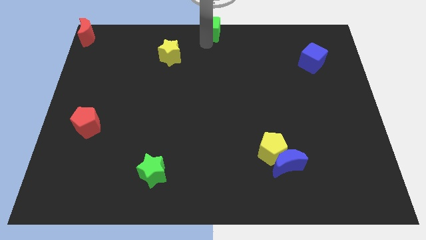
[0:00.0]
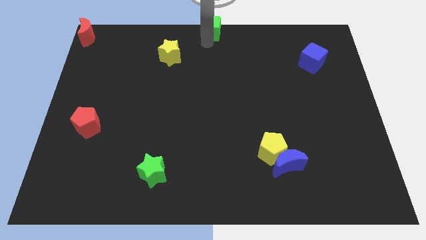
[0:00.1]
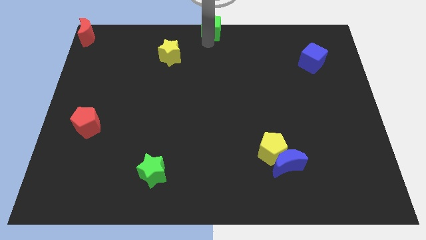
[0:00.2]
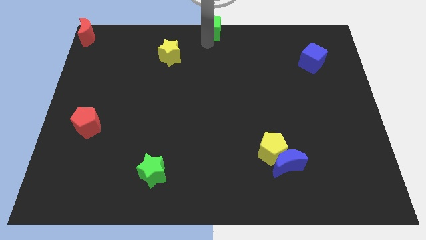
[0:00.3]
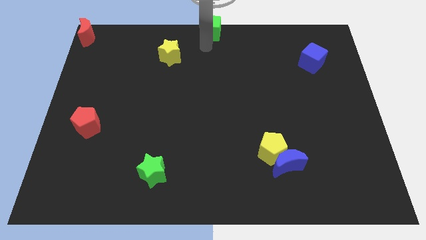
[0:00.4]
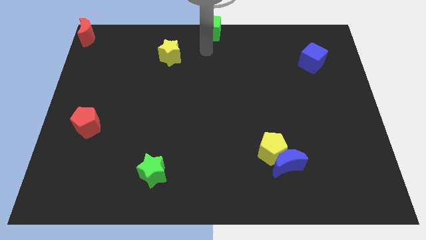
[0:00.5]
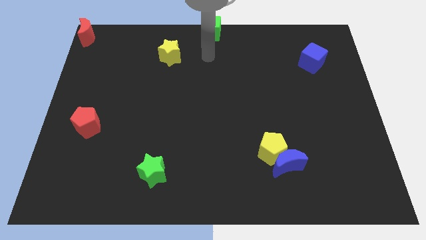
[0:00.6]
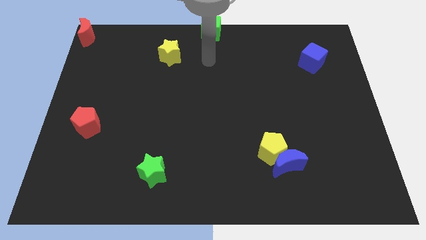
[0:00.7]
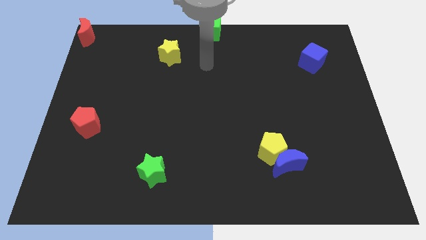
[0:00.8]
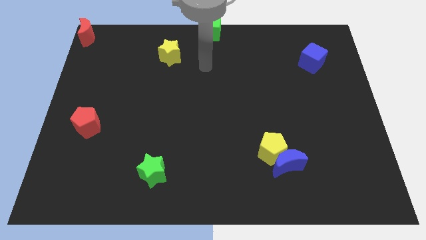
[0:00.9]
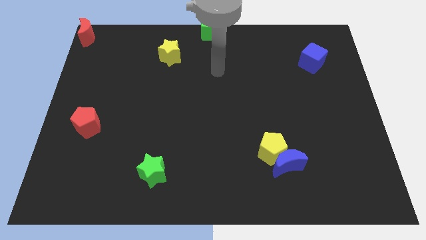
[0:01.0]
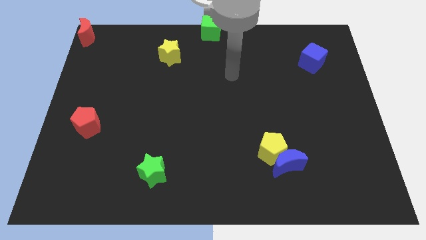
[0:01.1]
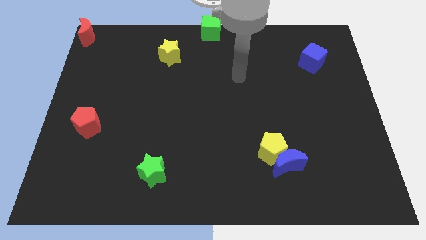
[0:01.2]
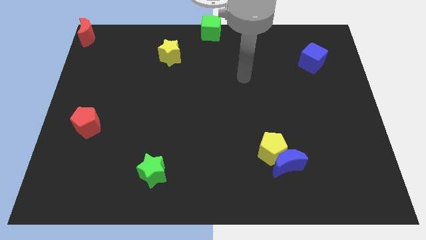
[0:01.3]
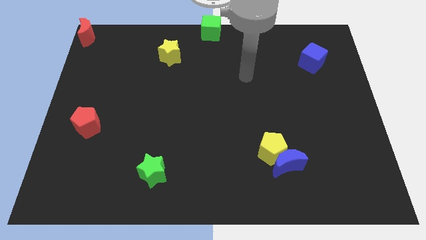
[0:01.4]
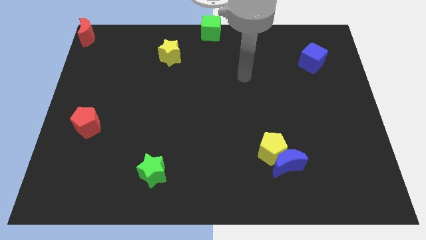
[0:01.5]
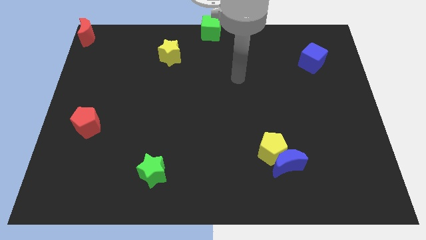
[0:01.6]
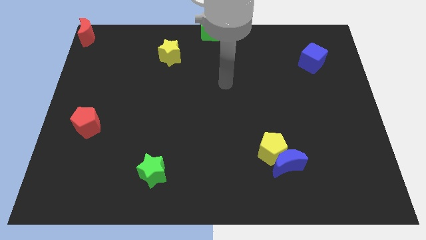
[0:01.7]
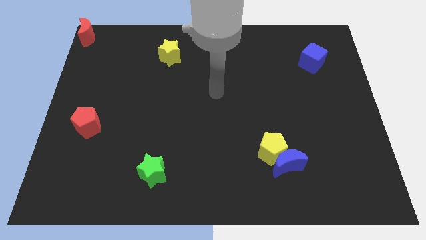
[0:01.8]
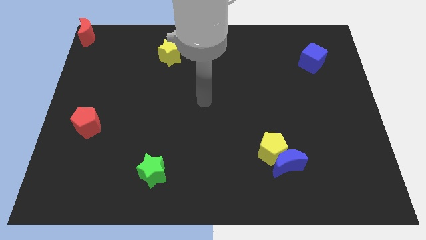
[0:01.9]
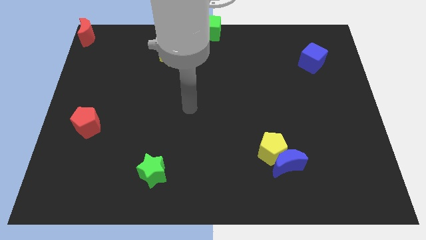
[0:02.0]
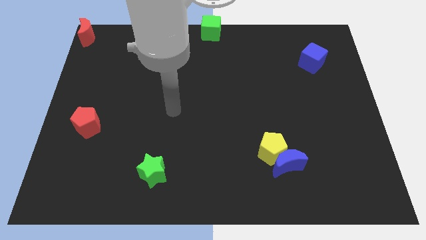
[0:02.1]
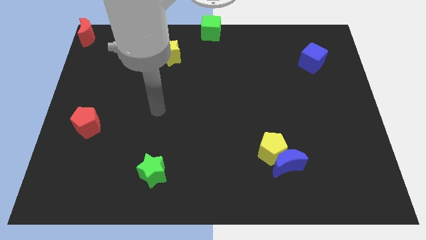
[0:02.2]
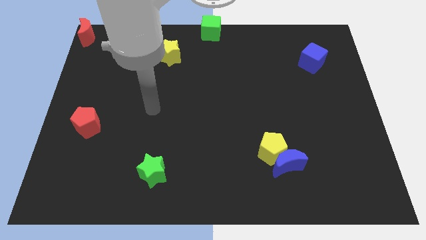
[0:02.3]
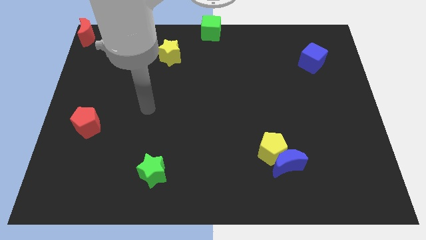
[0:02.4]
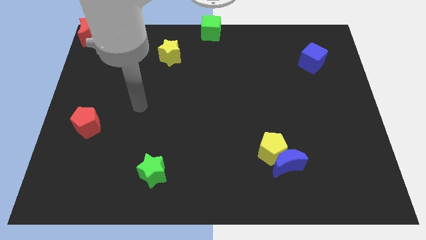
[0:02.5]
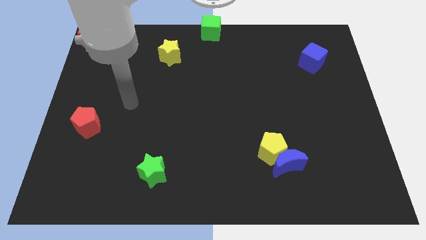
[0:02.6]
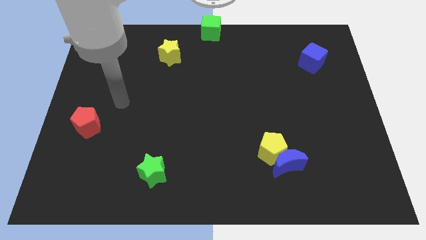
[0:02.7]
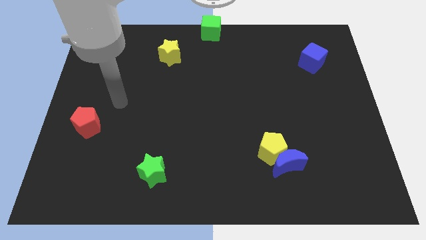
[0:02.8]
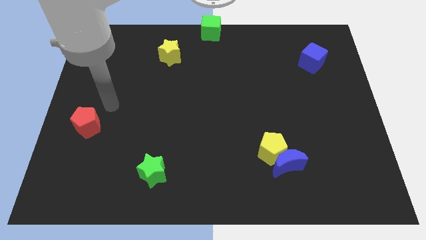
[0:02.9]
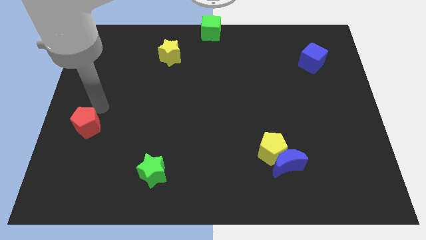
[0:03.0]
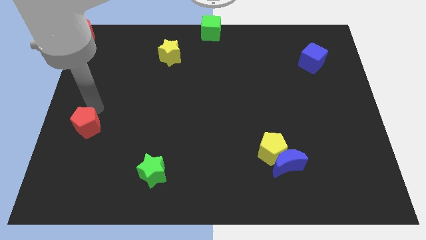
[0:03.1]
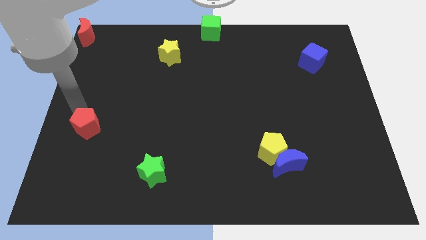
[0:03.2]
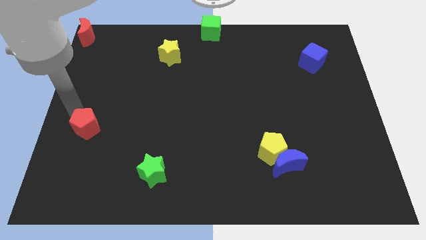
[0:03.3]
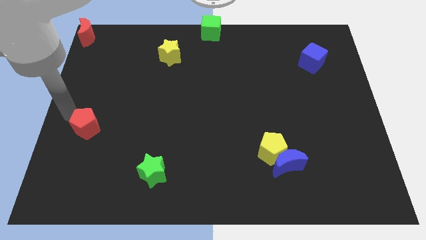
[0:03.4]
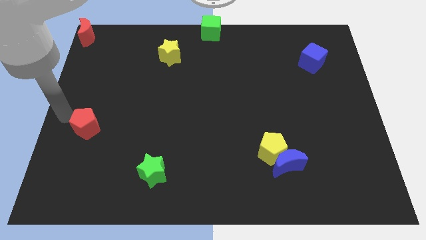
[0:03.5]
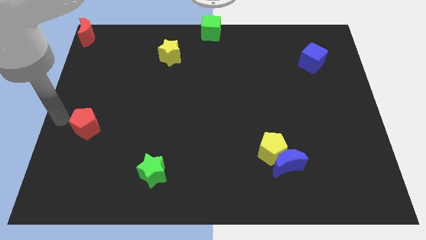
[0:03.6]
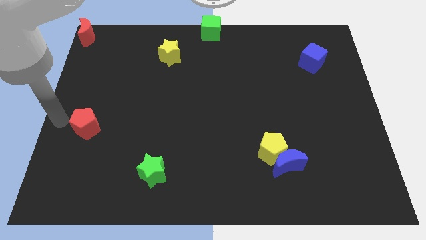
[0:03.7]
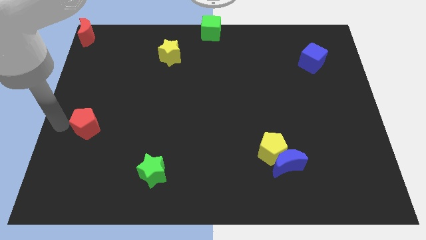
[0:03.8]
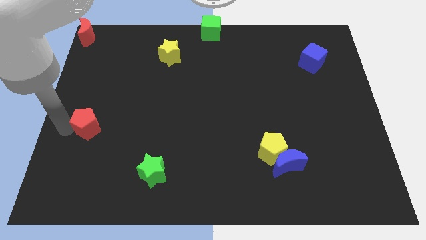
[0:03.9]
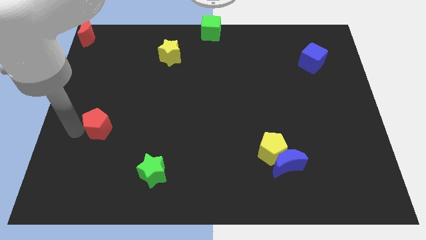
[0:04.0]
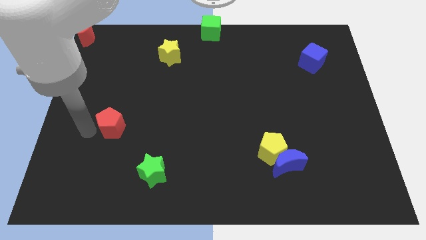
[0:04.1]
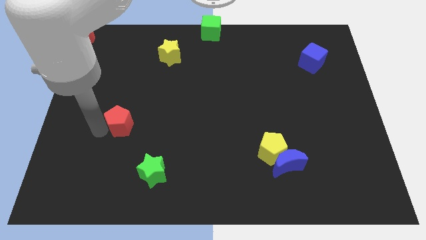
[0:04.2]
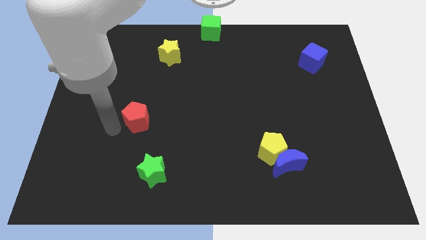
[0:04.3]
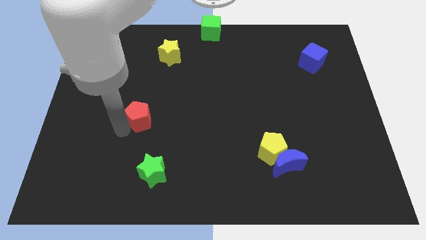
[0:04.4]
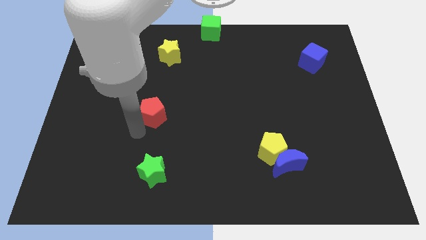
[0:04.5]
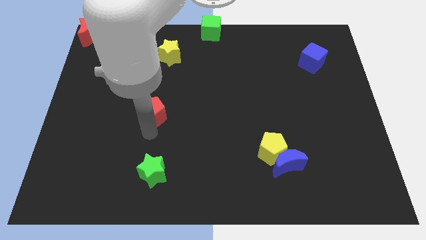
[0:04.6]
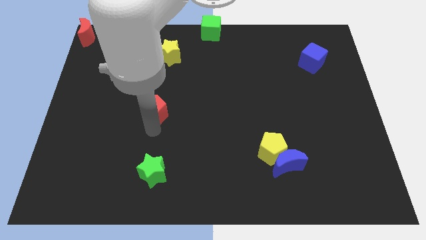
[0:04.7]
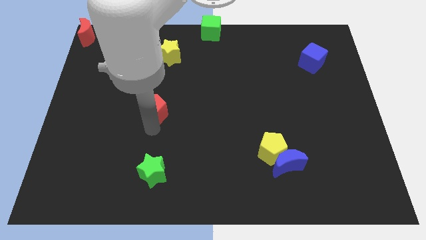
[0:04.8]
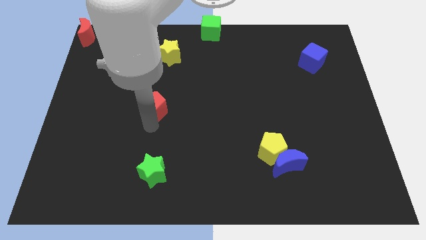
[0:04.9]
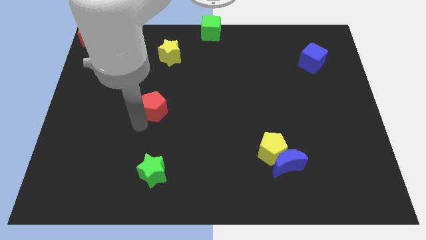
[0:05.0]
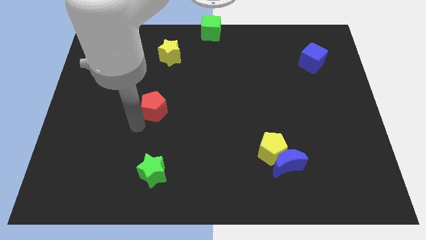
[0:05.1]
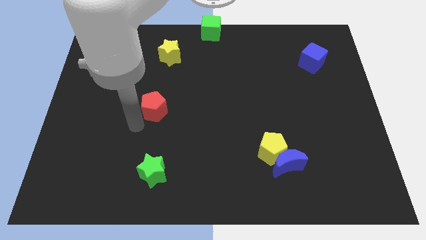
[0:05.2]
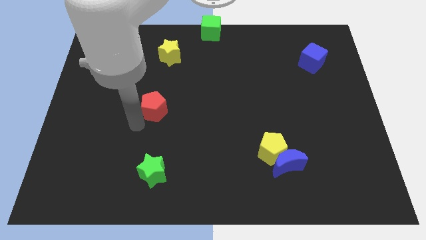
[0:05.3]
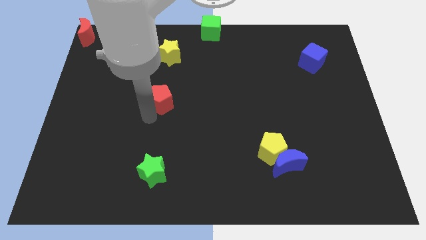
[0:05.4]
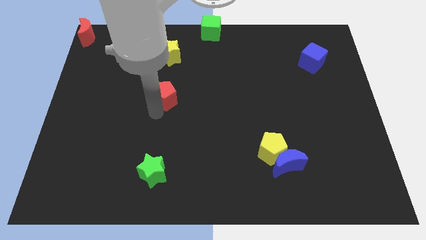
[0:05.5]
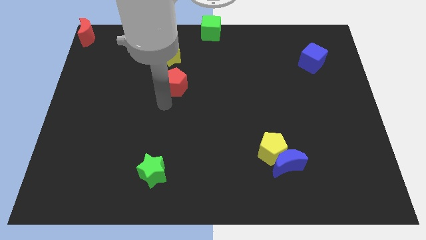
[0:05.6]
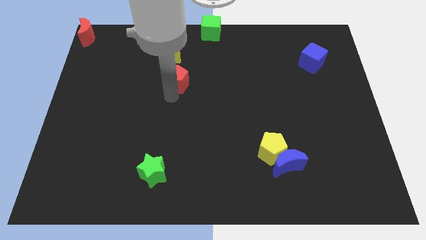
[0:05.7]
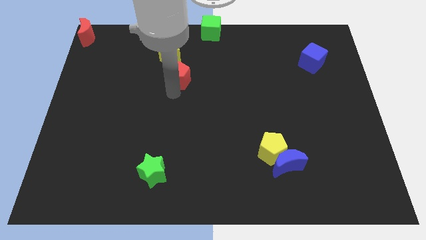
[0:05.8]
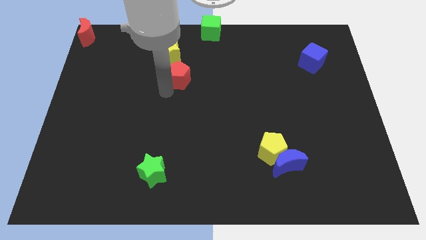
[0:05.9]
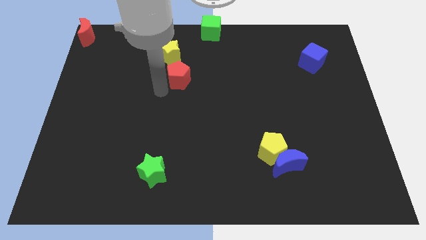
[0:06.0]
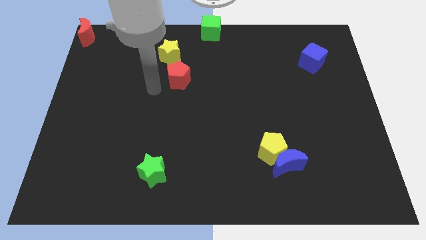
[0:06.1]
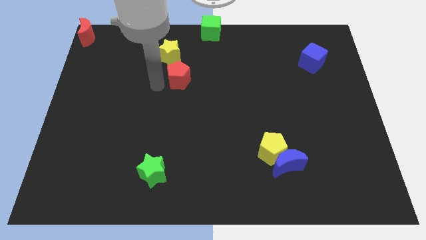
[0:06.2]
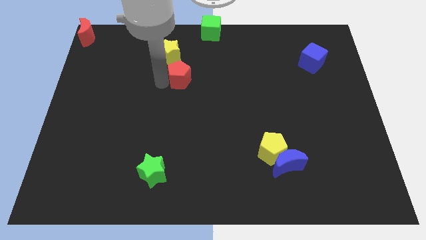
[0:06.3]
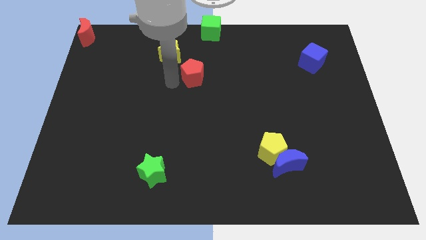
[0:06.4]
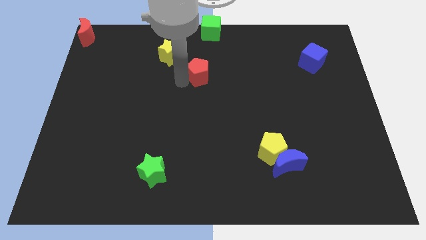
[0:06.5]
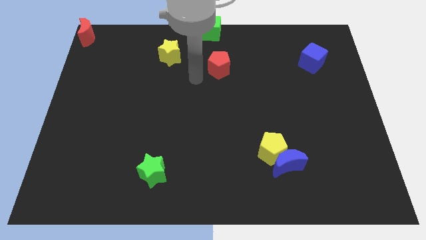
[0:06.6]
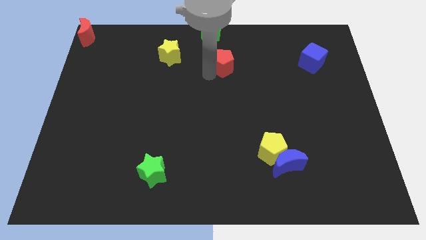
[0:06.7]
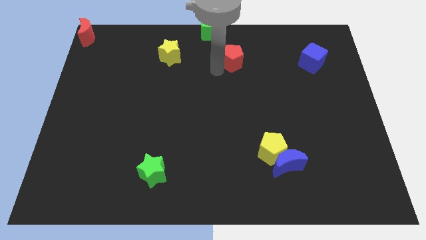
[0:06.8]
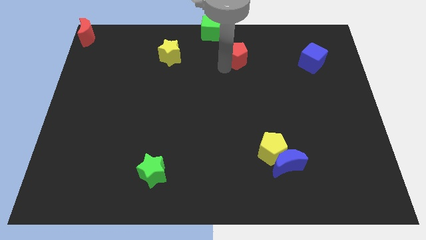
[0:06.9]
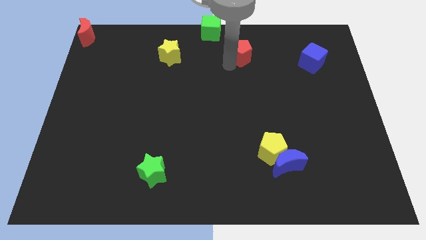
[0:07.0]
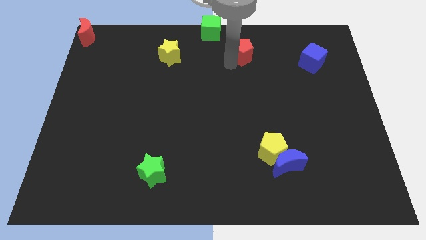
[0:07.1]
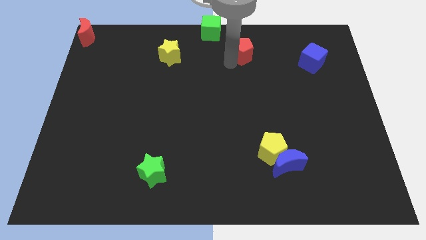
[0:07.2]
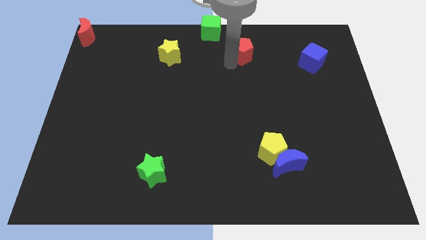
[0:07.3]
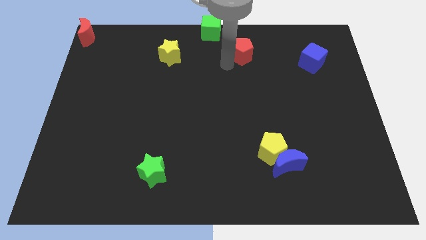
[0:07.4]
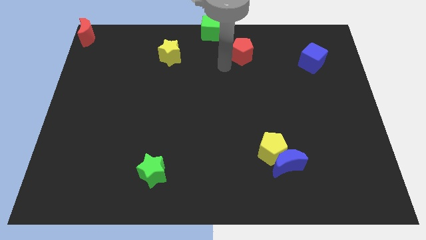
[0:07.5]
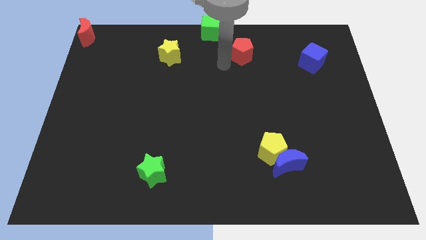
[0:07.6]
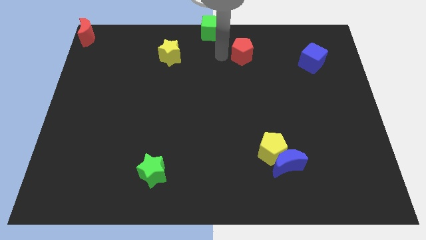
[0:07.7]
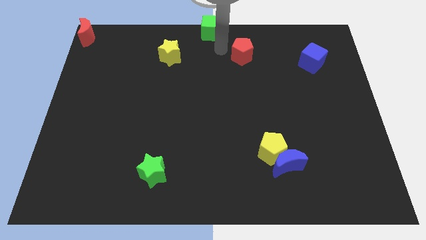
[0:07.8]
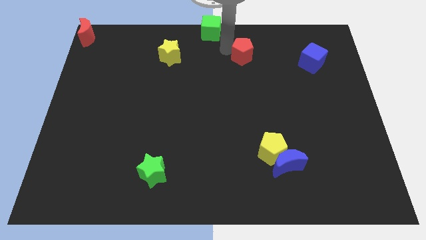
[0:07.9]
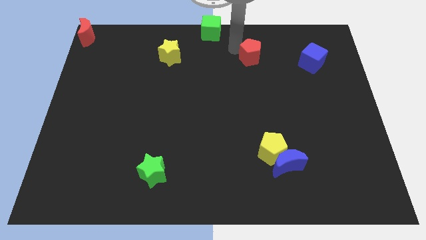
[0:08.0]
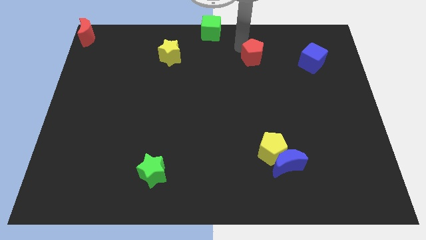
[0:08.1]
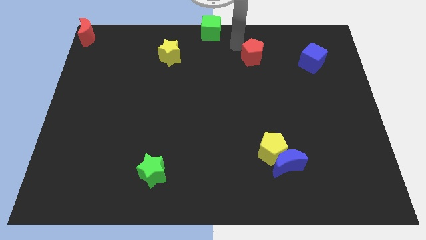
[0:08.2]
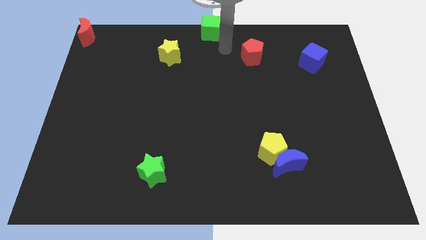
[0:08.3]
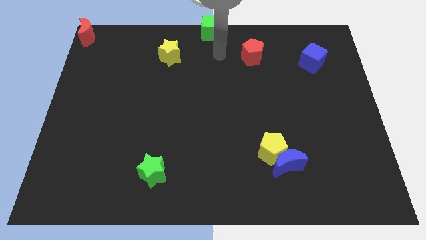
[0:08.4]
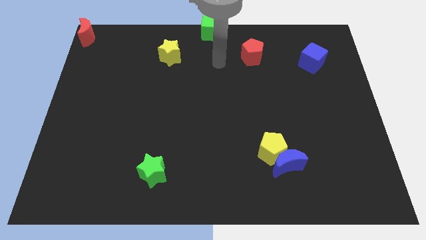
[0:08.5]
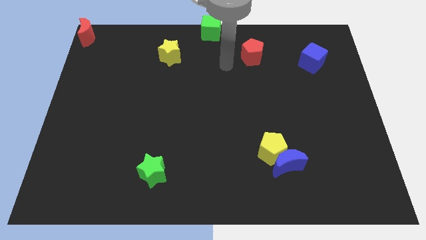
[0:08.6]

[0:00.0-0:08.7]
move the red pentagon towards the right of green cube

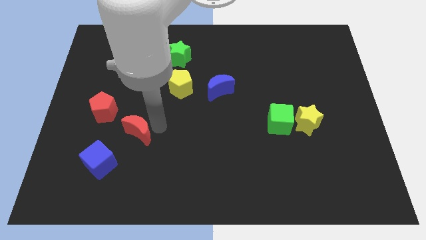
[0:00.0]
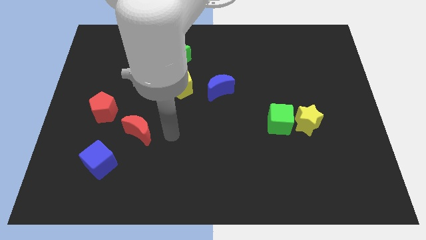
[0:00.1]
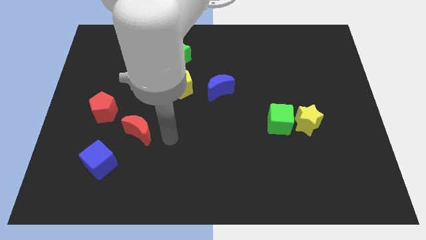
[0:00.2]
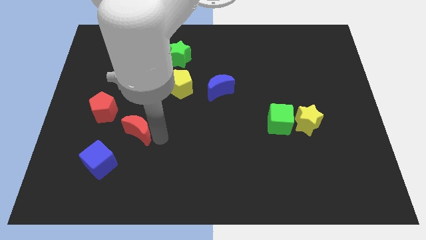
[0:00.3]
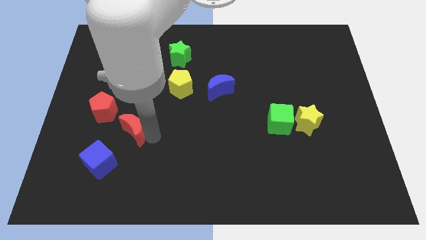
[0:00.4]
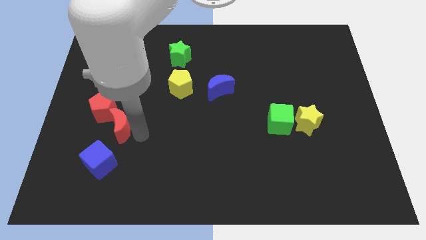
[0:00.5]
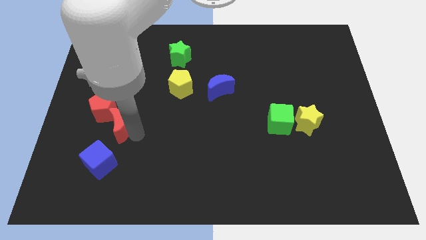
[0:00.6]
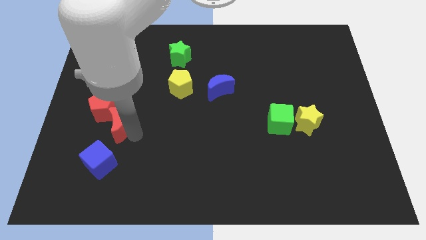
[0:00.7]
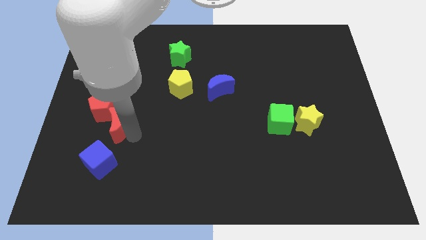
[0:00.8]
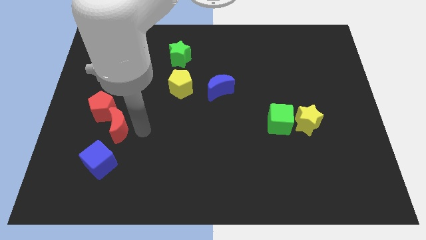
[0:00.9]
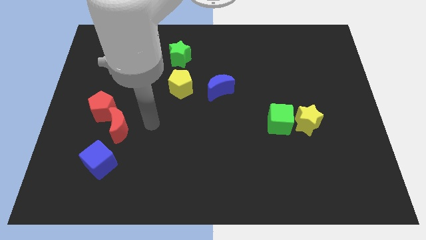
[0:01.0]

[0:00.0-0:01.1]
push the red crescent into the red pentagon
